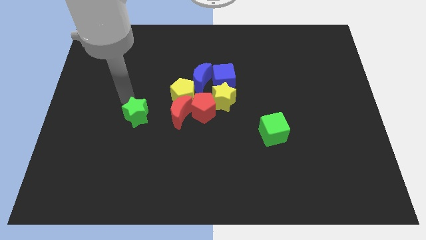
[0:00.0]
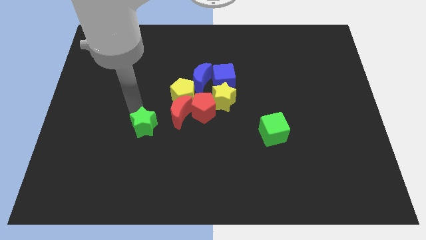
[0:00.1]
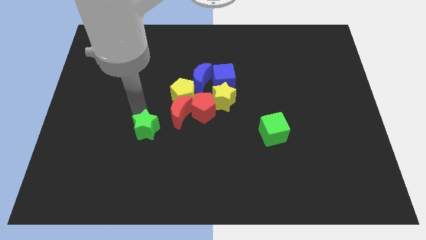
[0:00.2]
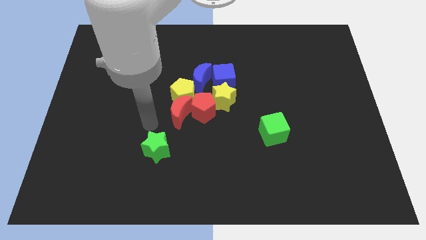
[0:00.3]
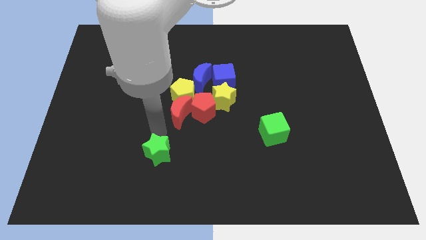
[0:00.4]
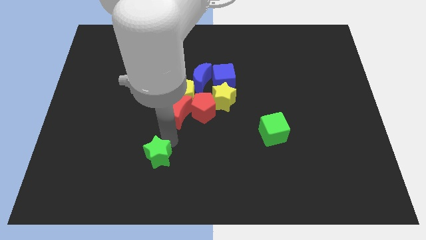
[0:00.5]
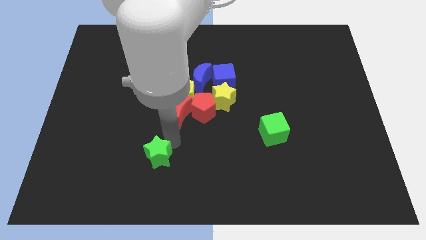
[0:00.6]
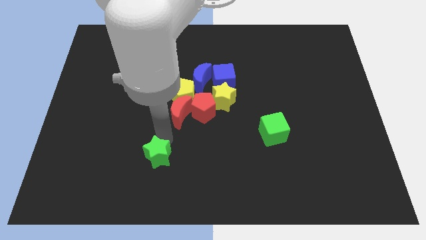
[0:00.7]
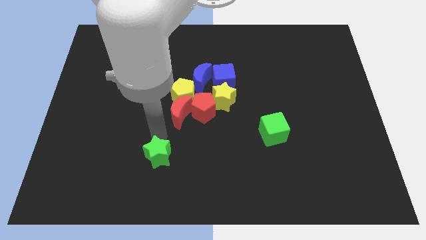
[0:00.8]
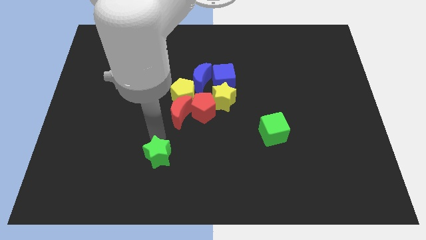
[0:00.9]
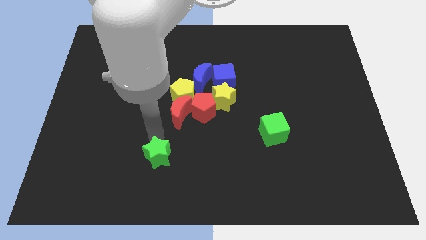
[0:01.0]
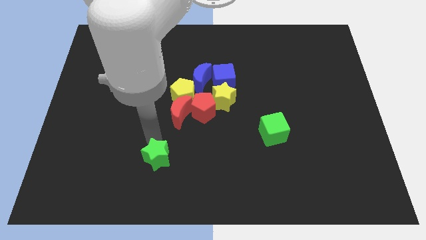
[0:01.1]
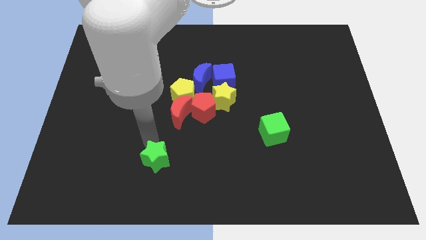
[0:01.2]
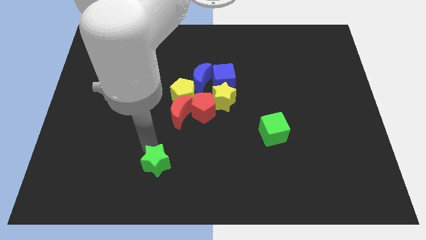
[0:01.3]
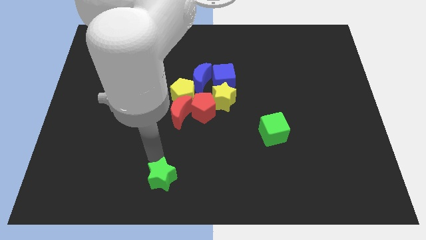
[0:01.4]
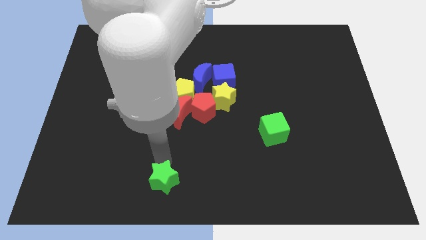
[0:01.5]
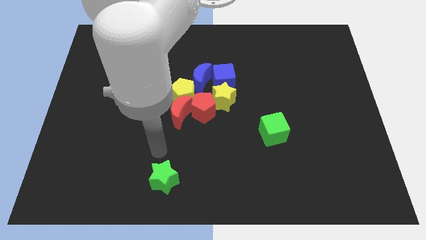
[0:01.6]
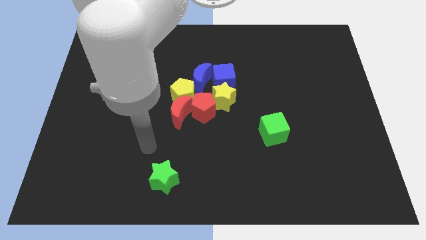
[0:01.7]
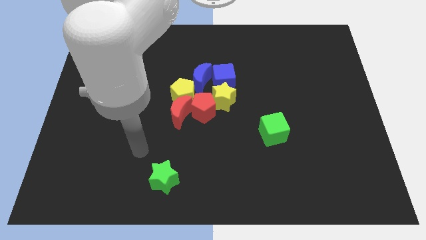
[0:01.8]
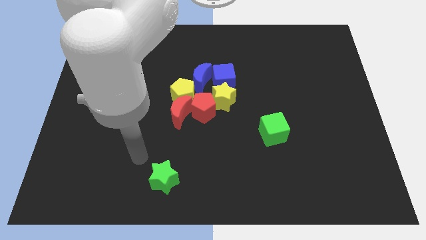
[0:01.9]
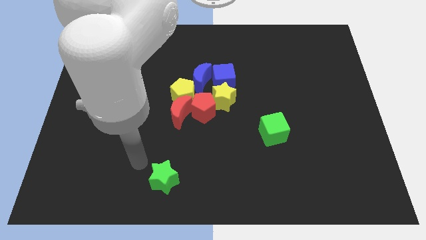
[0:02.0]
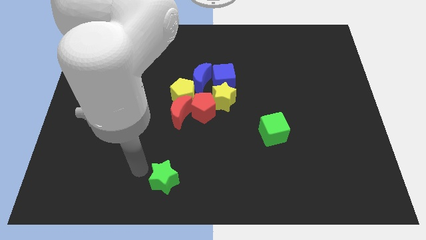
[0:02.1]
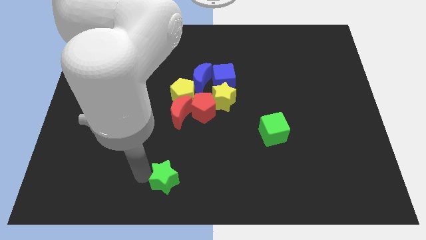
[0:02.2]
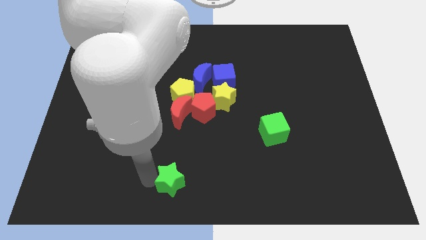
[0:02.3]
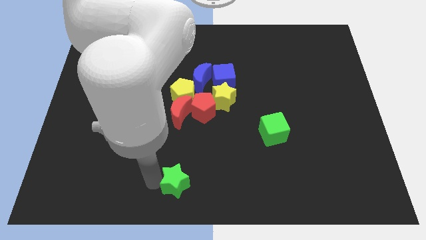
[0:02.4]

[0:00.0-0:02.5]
place the green star below the red crescent

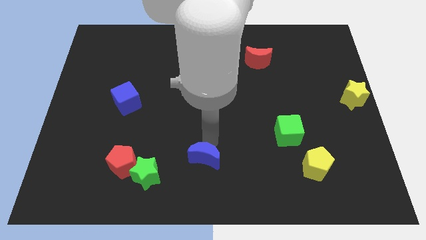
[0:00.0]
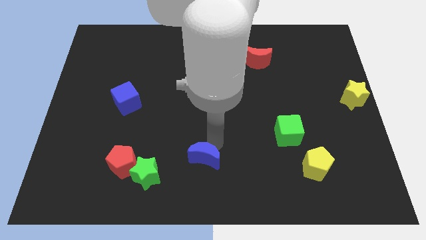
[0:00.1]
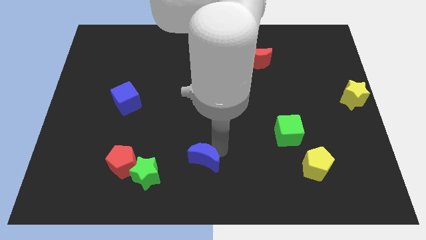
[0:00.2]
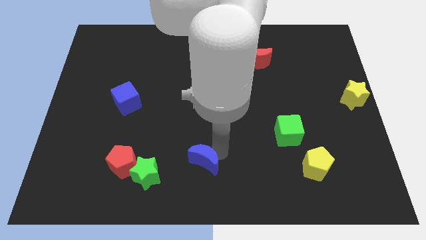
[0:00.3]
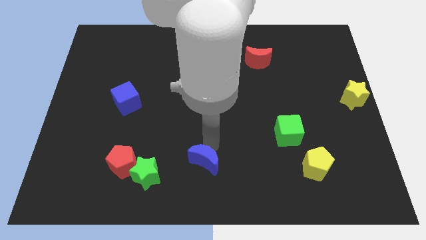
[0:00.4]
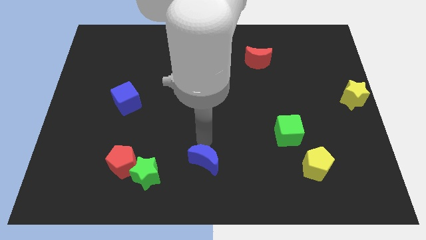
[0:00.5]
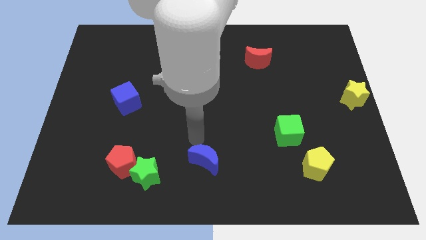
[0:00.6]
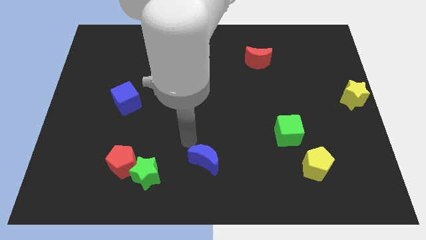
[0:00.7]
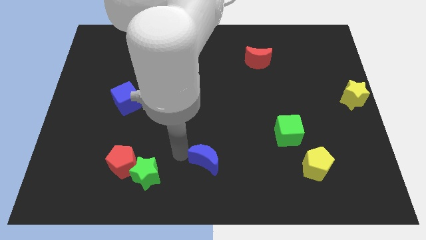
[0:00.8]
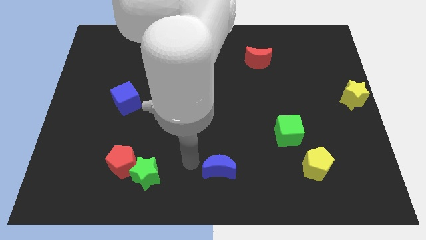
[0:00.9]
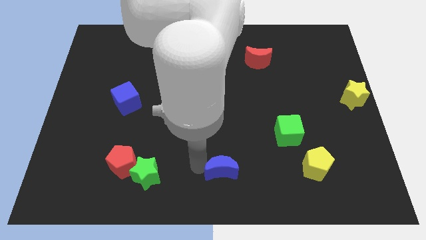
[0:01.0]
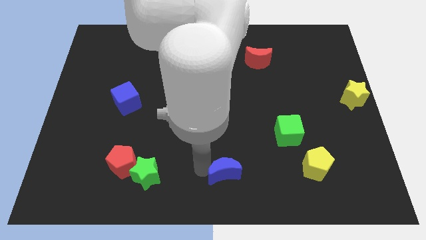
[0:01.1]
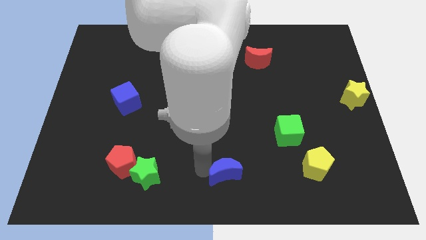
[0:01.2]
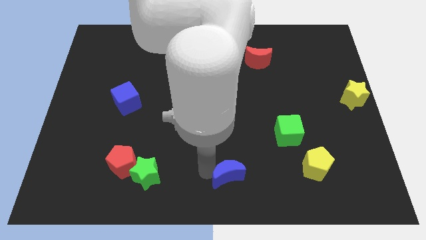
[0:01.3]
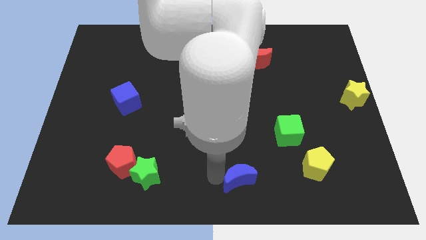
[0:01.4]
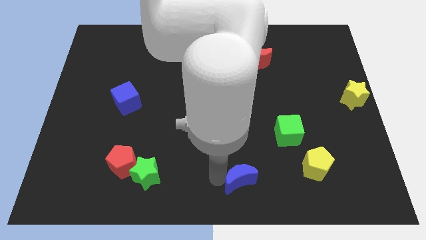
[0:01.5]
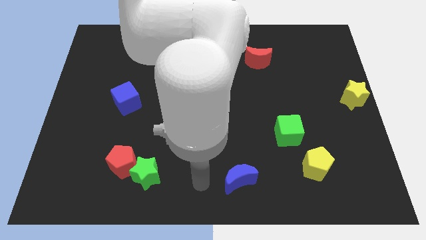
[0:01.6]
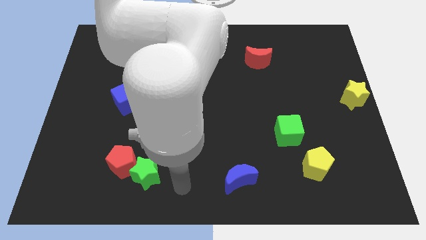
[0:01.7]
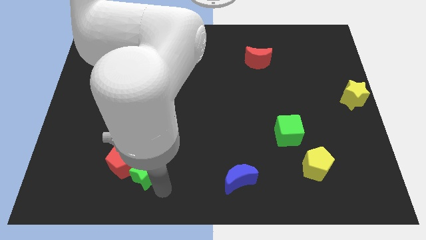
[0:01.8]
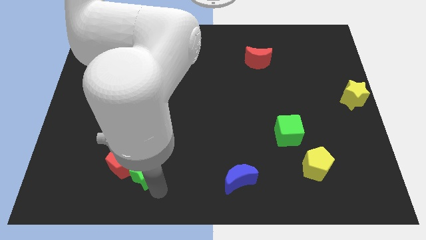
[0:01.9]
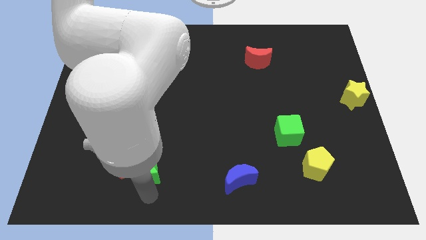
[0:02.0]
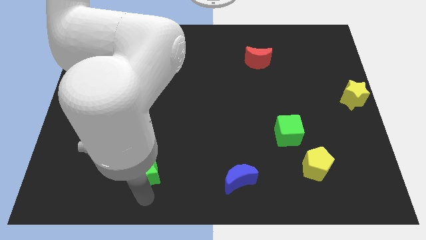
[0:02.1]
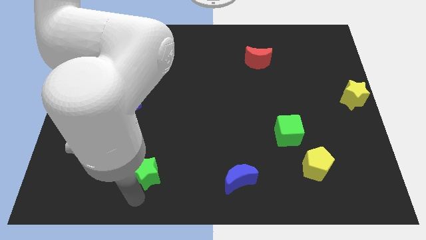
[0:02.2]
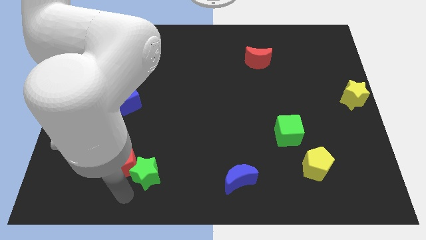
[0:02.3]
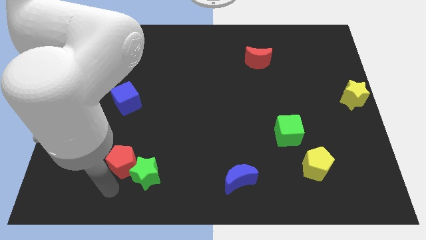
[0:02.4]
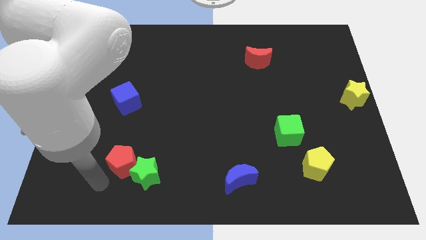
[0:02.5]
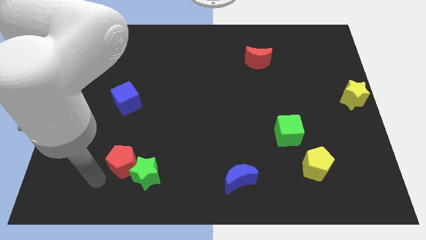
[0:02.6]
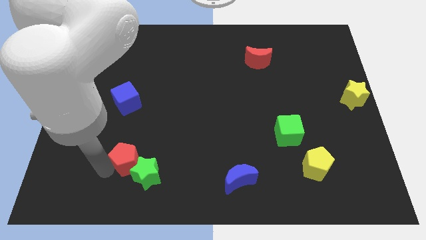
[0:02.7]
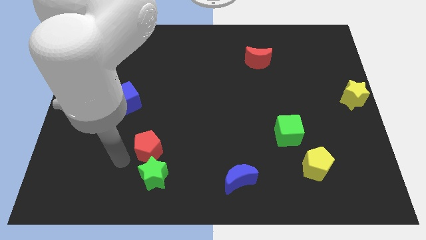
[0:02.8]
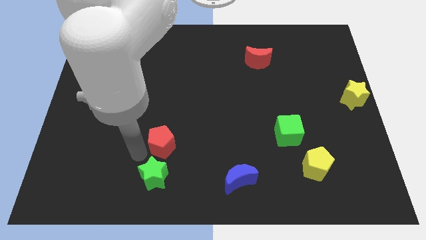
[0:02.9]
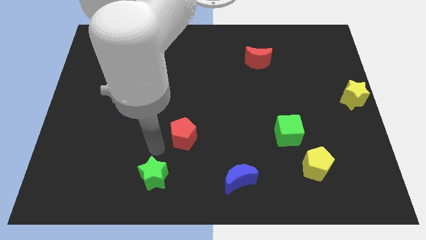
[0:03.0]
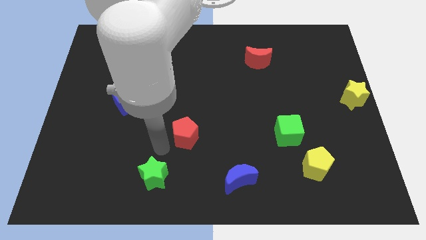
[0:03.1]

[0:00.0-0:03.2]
separate the red pentagon from the green star

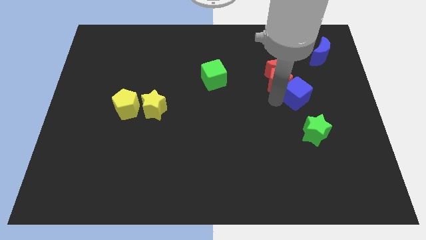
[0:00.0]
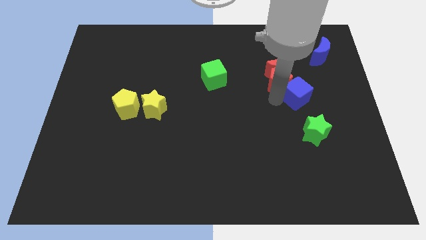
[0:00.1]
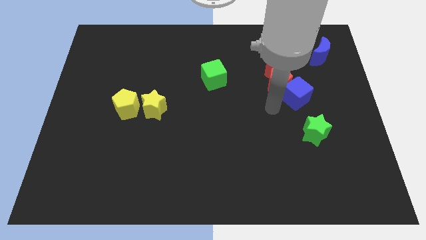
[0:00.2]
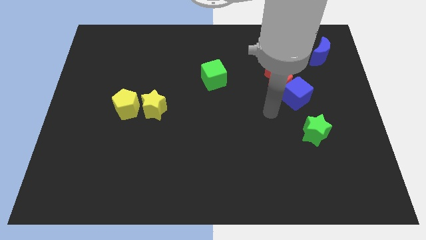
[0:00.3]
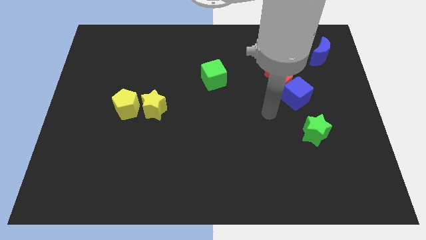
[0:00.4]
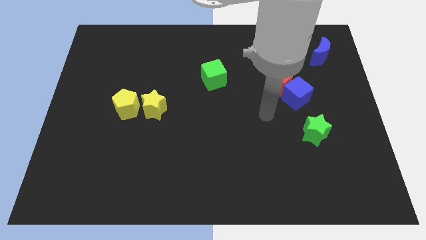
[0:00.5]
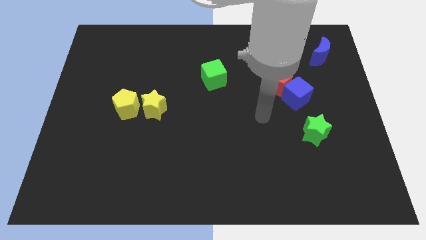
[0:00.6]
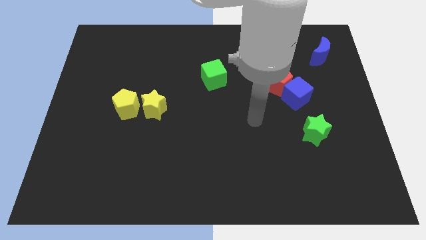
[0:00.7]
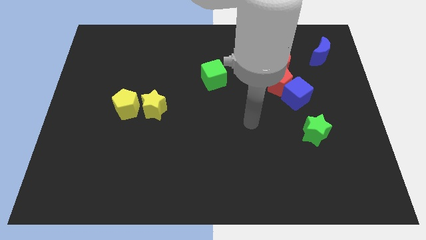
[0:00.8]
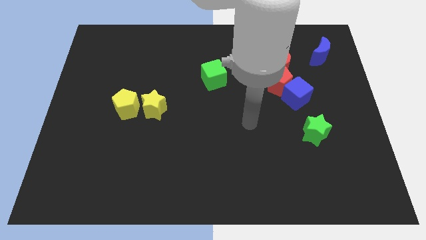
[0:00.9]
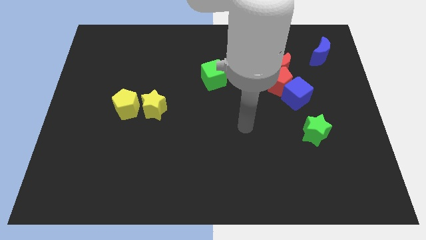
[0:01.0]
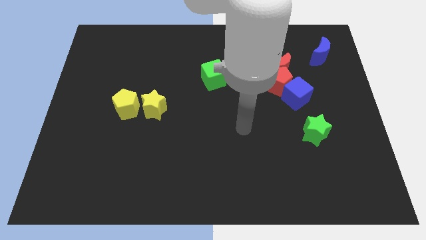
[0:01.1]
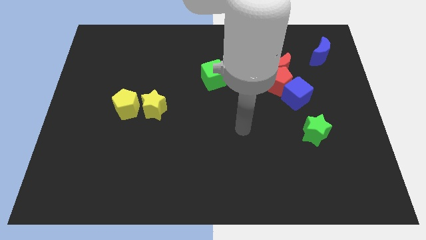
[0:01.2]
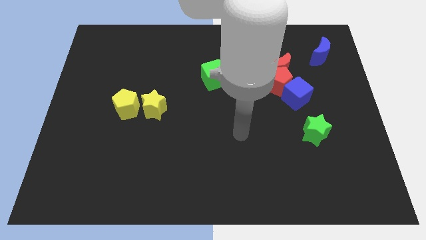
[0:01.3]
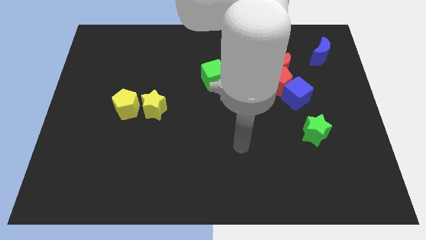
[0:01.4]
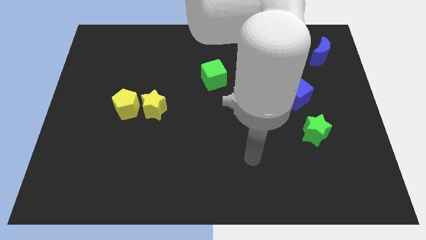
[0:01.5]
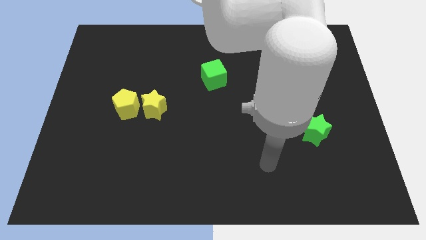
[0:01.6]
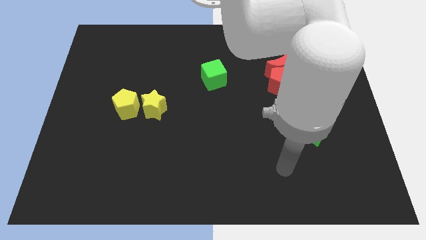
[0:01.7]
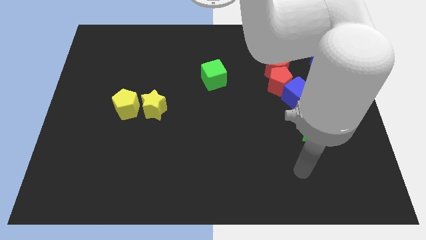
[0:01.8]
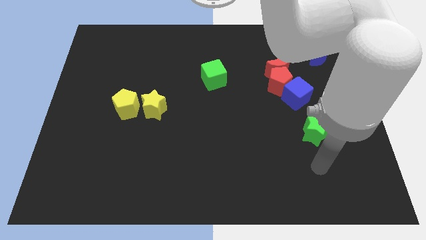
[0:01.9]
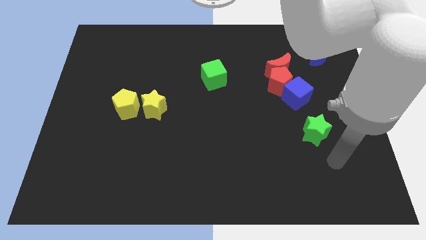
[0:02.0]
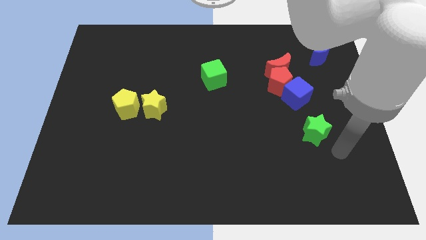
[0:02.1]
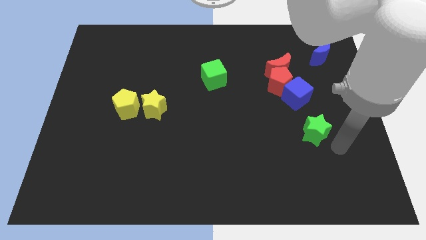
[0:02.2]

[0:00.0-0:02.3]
move your arm away from the blue cube

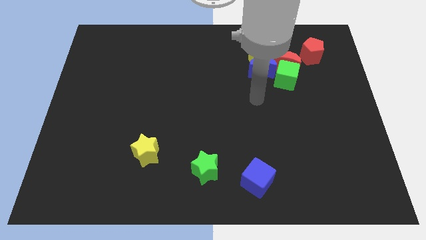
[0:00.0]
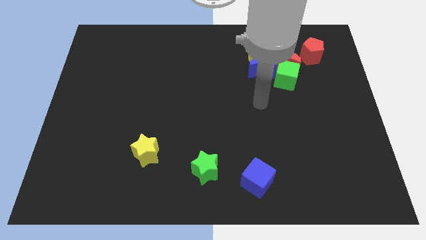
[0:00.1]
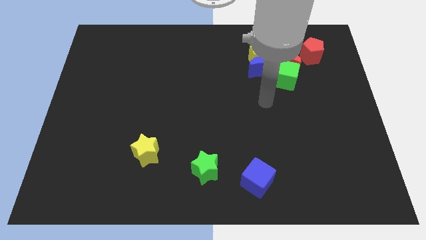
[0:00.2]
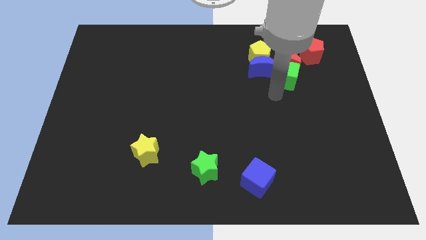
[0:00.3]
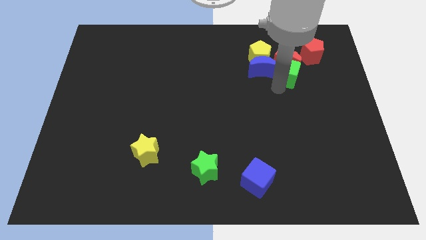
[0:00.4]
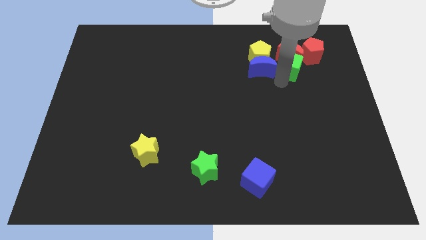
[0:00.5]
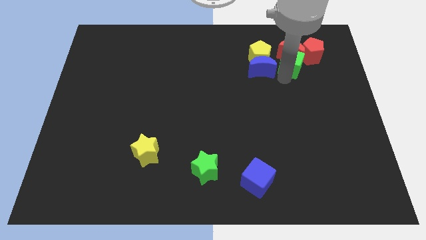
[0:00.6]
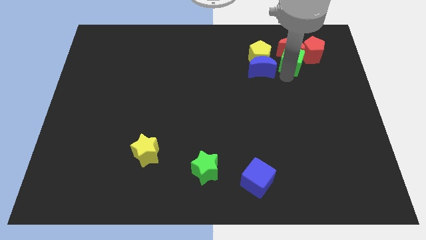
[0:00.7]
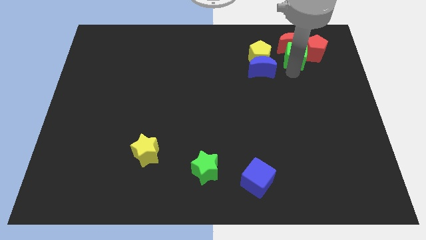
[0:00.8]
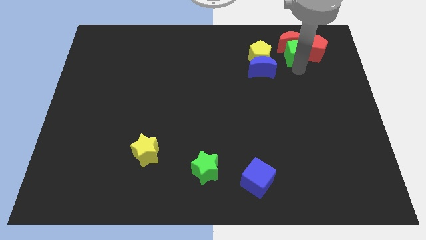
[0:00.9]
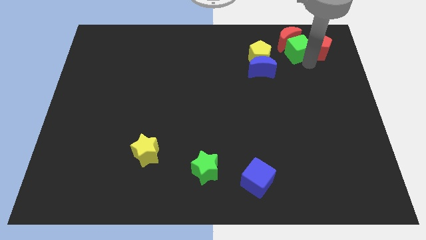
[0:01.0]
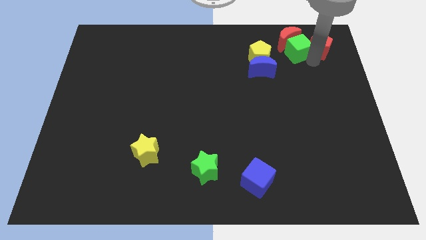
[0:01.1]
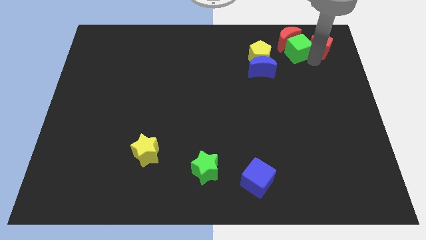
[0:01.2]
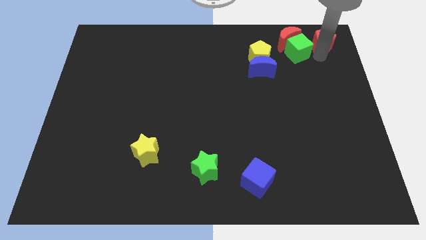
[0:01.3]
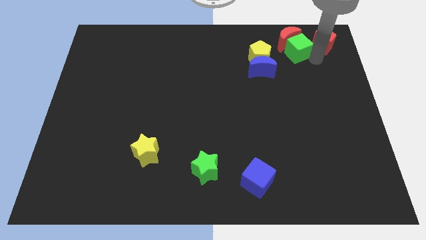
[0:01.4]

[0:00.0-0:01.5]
push red crescent with green cube
